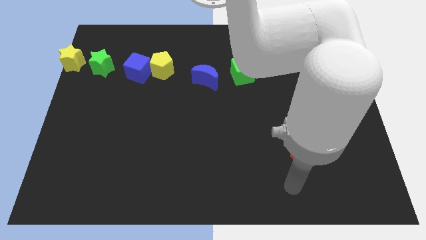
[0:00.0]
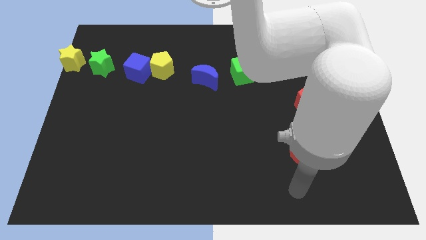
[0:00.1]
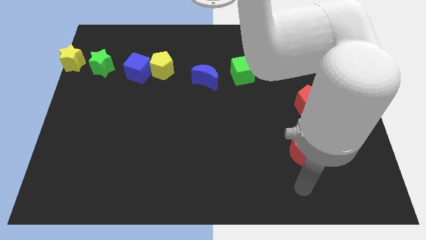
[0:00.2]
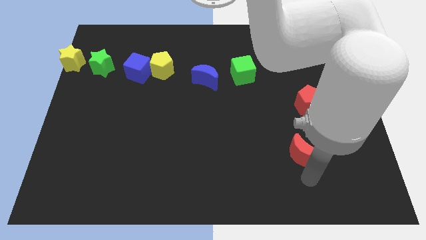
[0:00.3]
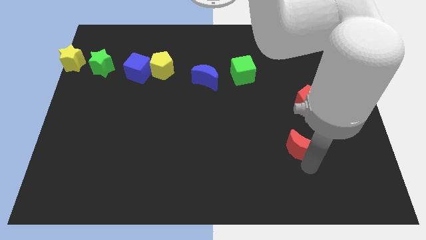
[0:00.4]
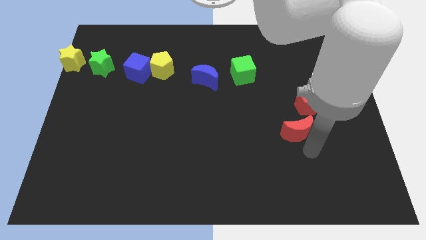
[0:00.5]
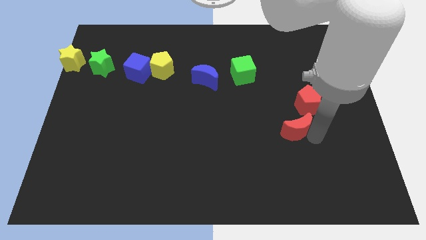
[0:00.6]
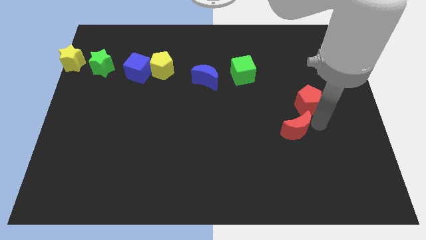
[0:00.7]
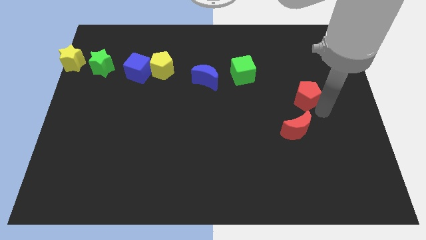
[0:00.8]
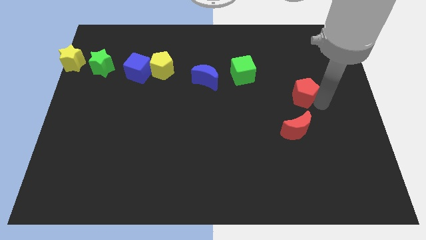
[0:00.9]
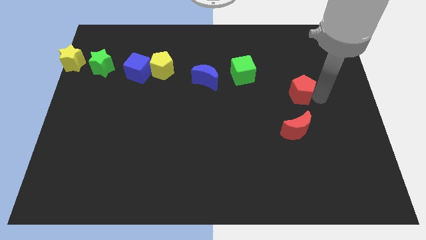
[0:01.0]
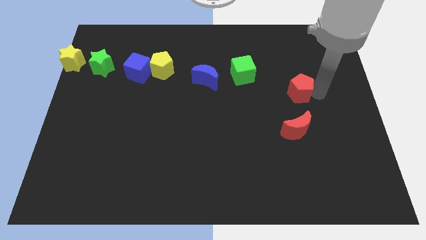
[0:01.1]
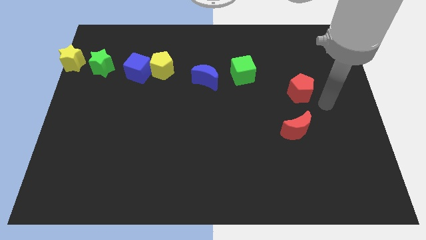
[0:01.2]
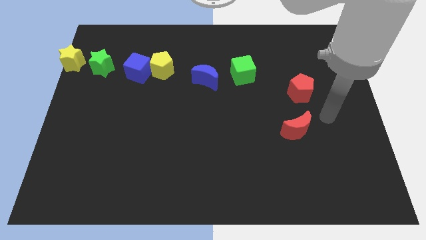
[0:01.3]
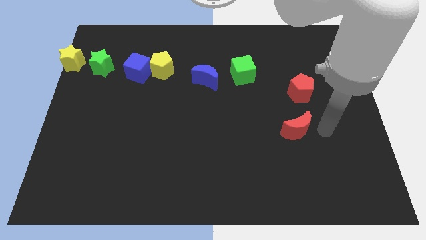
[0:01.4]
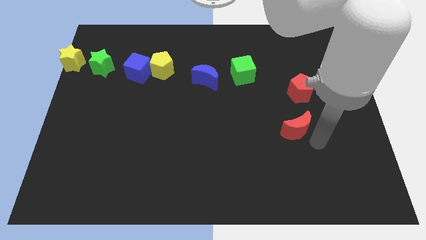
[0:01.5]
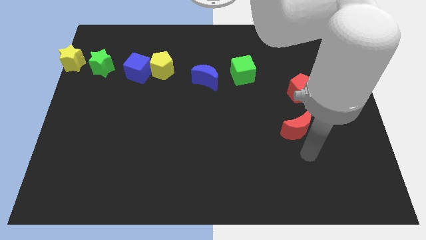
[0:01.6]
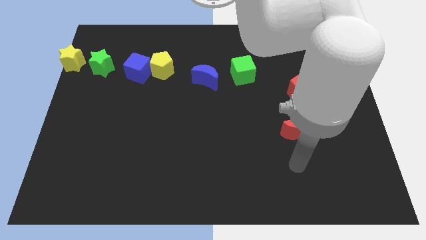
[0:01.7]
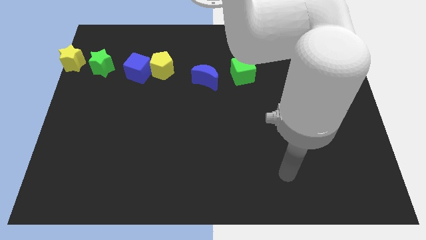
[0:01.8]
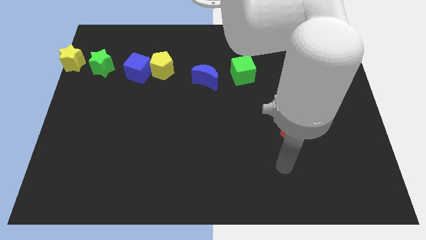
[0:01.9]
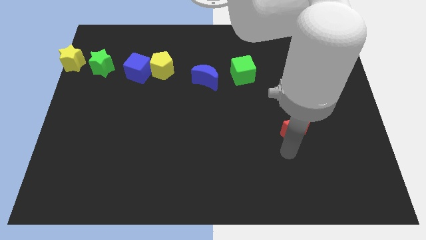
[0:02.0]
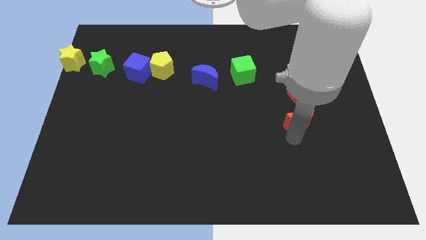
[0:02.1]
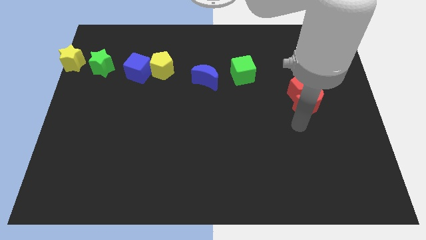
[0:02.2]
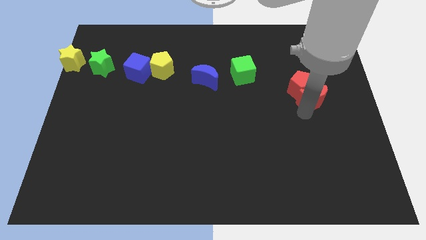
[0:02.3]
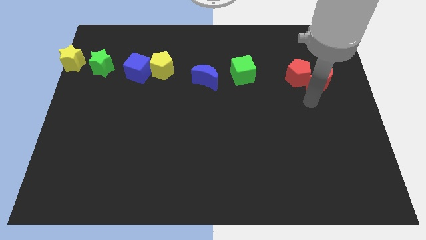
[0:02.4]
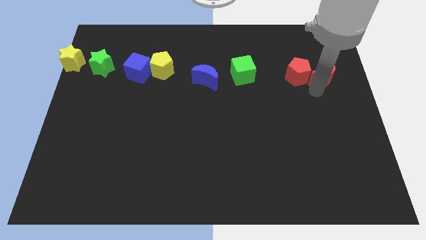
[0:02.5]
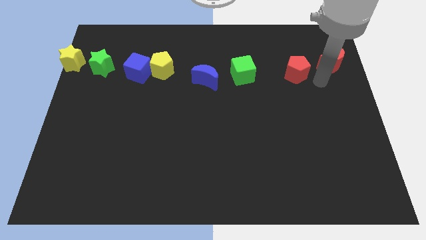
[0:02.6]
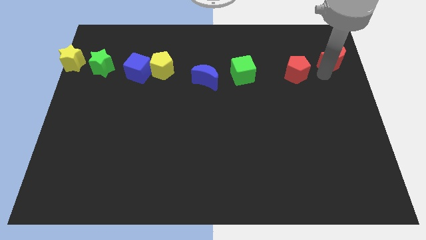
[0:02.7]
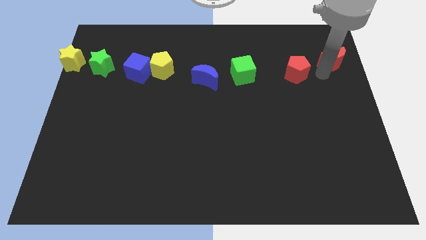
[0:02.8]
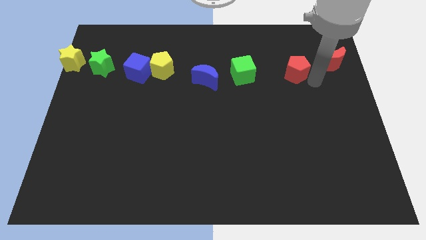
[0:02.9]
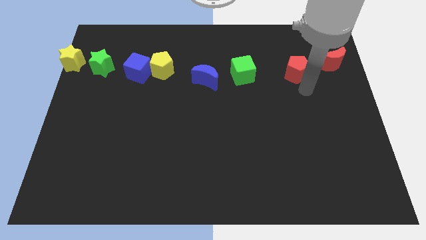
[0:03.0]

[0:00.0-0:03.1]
slide red moon and red pentagon towards top right

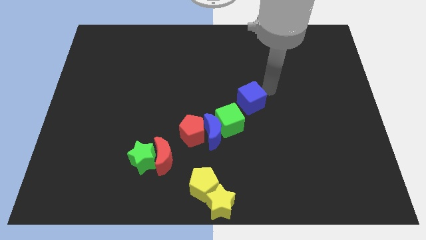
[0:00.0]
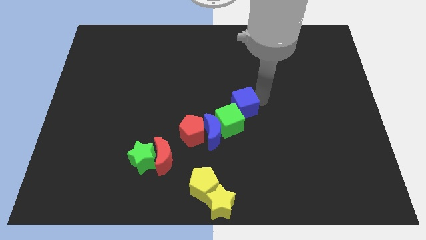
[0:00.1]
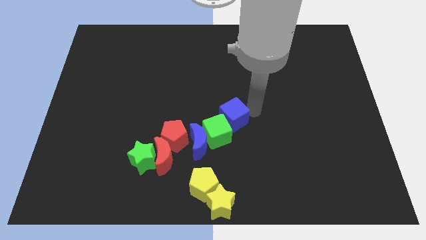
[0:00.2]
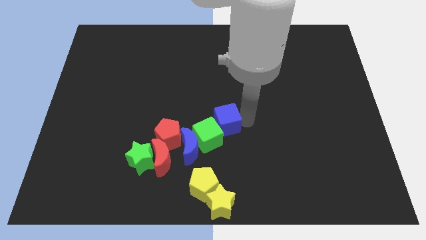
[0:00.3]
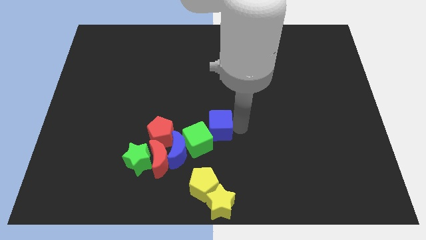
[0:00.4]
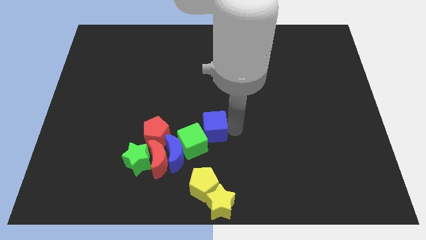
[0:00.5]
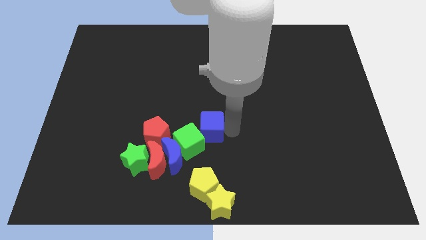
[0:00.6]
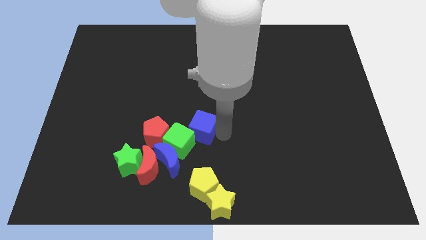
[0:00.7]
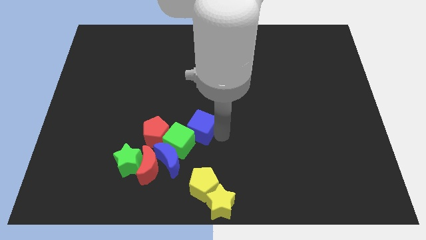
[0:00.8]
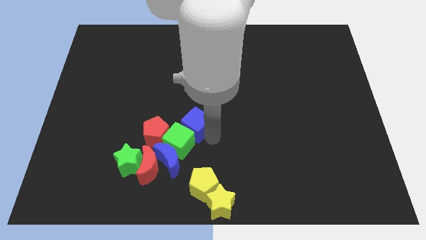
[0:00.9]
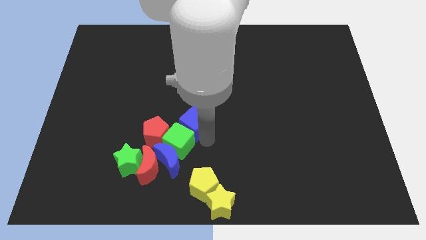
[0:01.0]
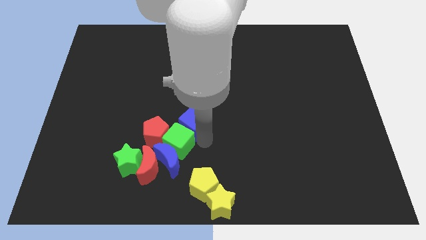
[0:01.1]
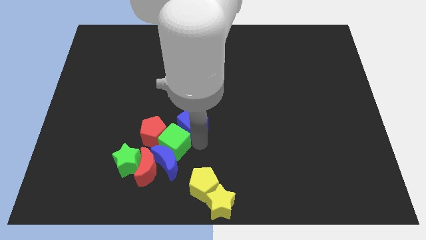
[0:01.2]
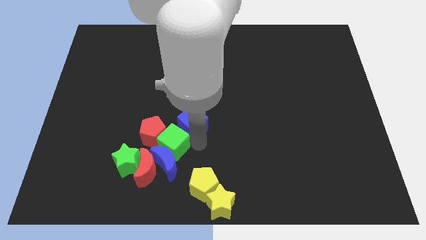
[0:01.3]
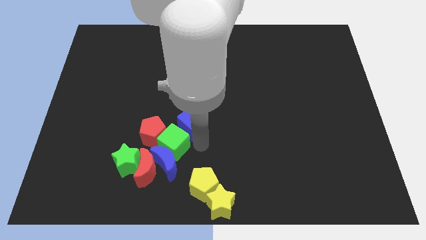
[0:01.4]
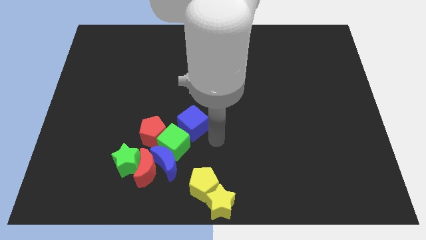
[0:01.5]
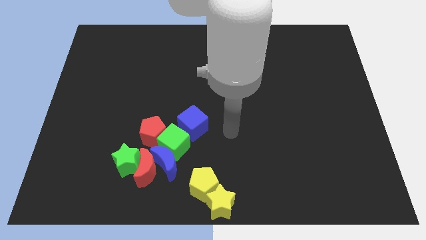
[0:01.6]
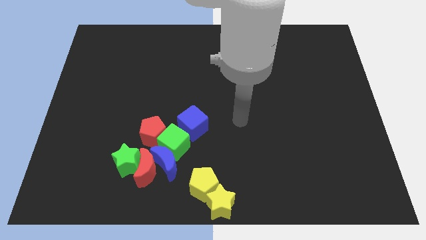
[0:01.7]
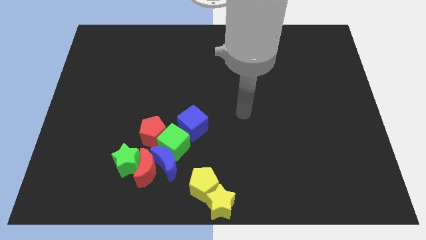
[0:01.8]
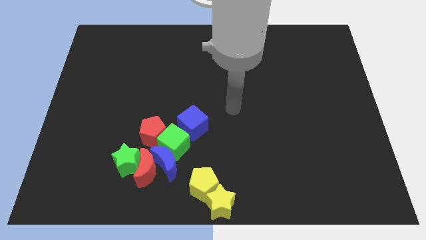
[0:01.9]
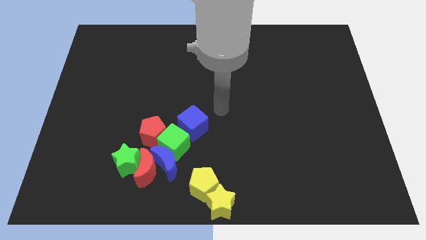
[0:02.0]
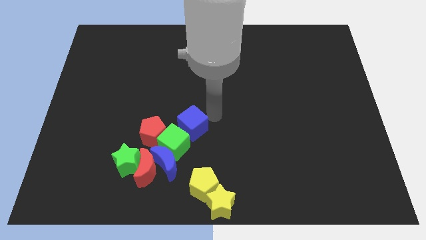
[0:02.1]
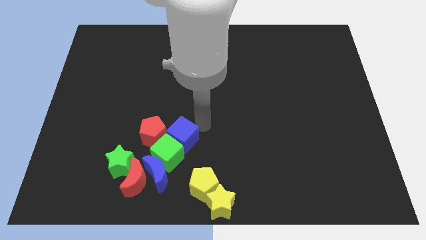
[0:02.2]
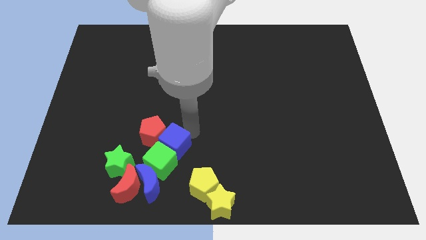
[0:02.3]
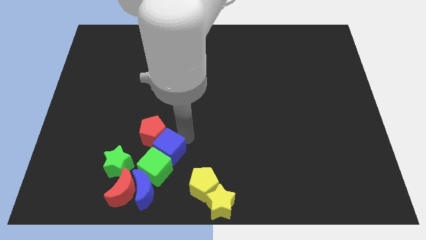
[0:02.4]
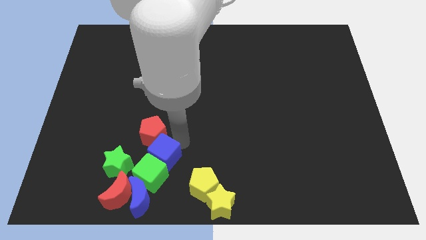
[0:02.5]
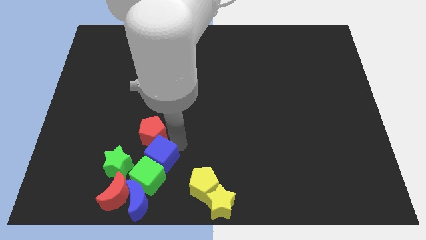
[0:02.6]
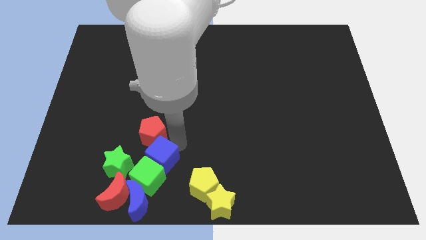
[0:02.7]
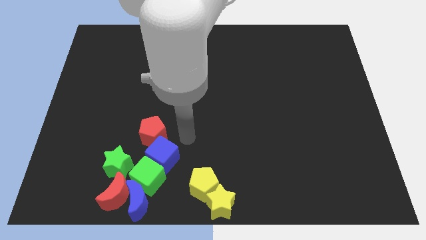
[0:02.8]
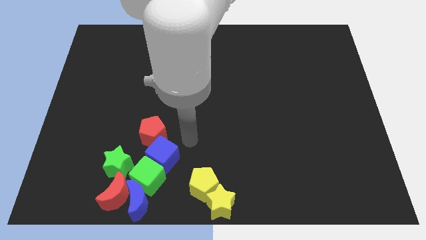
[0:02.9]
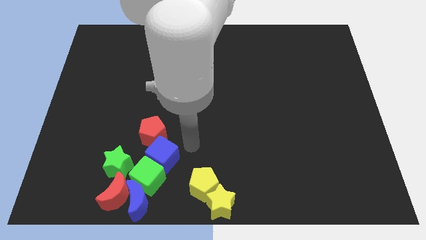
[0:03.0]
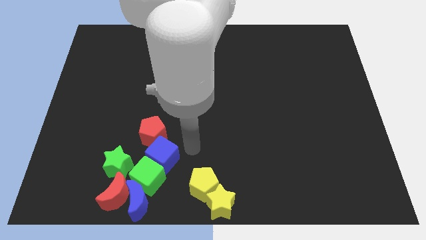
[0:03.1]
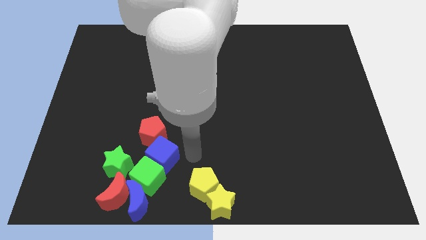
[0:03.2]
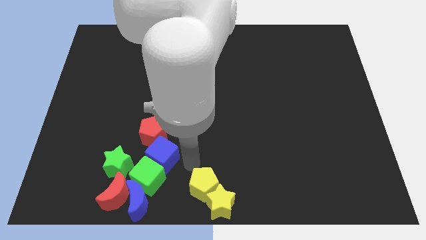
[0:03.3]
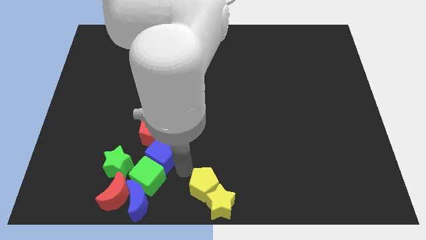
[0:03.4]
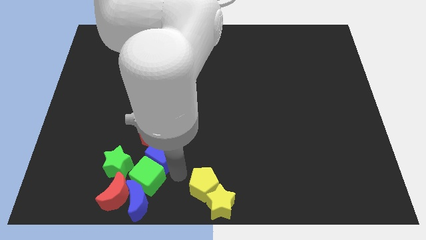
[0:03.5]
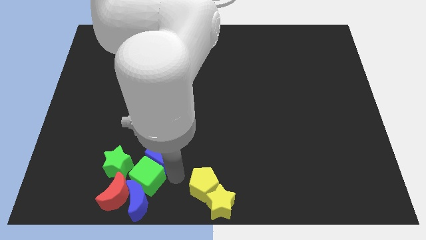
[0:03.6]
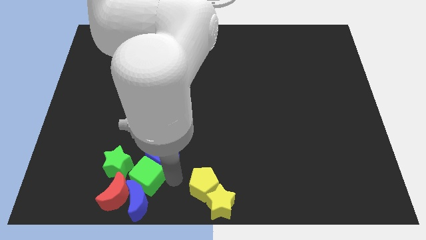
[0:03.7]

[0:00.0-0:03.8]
move the blue cube into the green cube and blue cresent

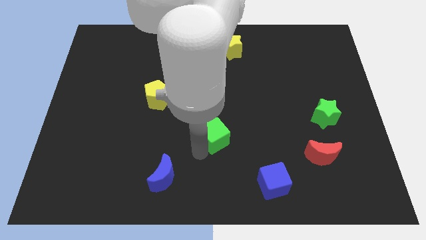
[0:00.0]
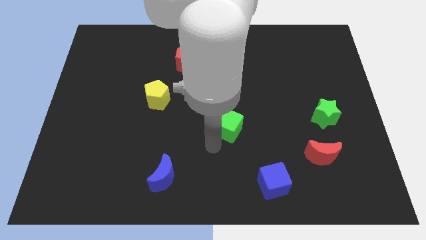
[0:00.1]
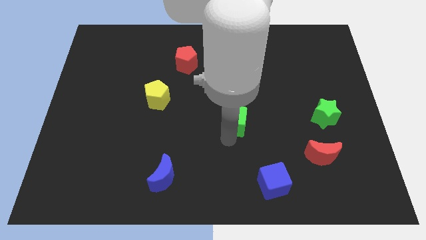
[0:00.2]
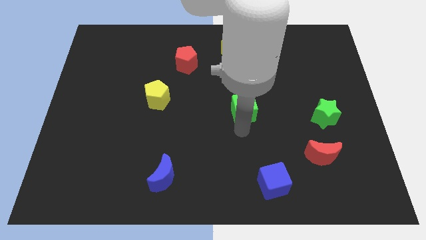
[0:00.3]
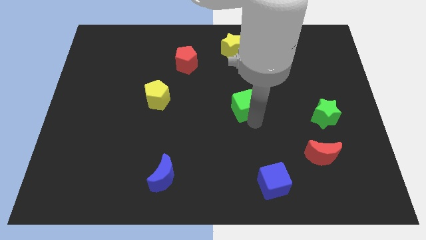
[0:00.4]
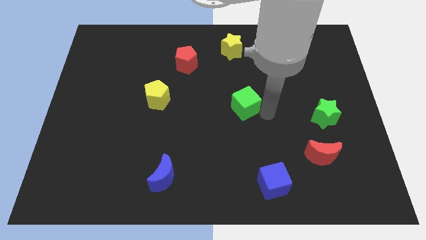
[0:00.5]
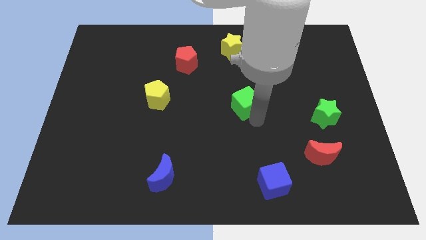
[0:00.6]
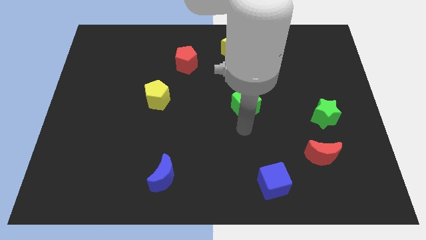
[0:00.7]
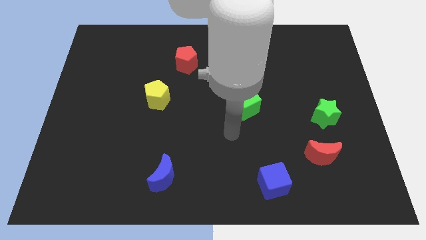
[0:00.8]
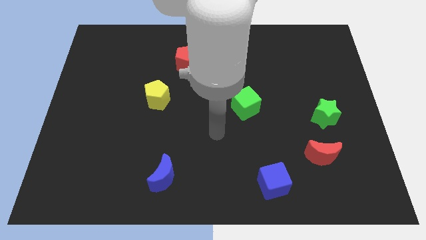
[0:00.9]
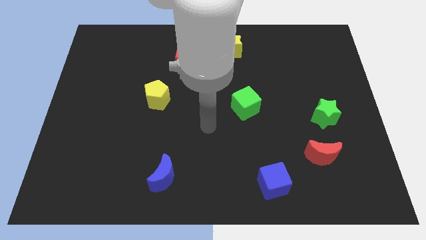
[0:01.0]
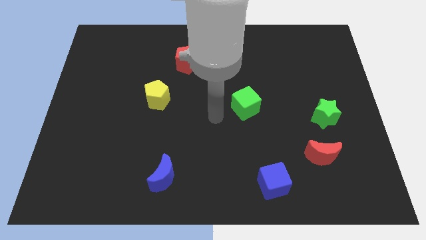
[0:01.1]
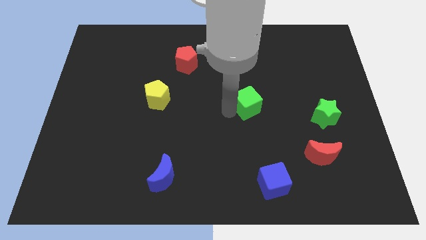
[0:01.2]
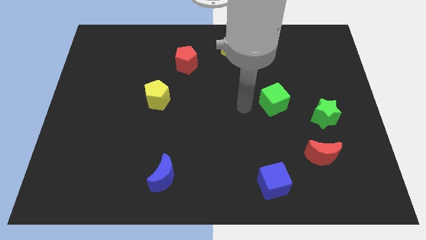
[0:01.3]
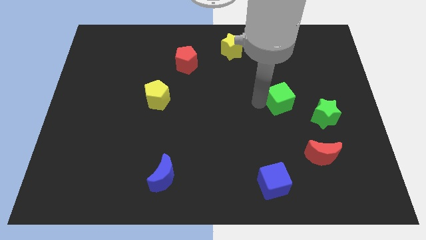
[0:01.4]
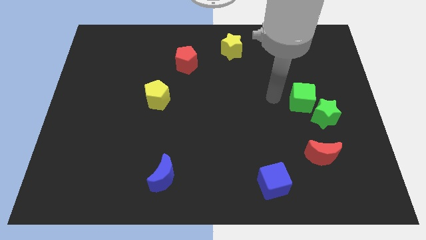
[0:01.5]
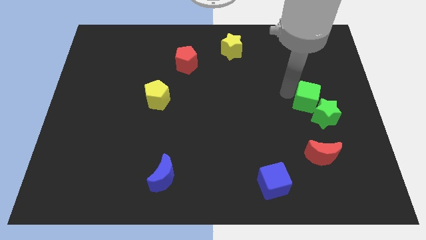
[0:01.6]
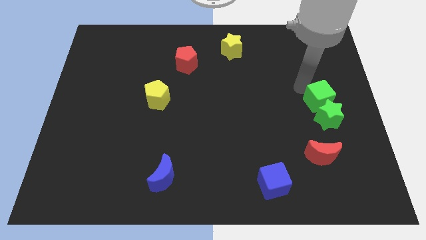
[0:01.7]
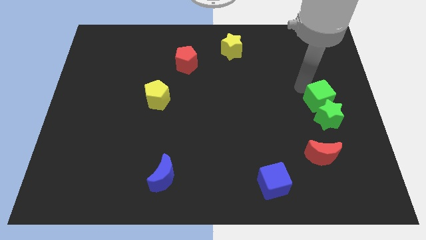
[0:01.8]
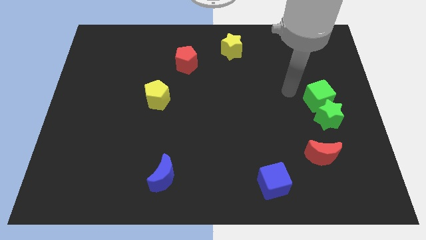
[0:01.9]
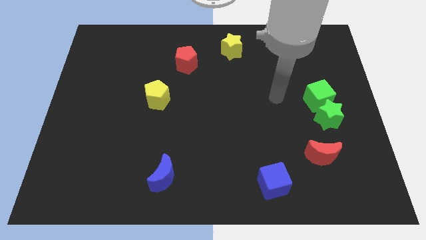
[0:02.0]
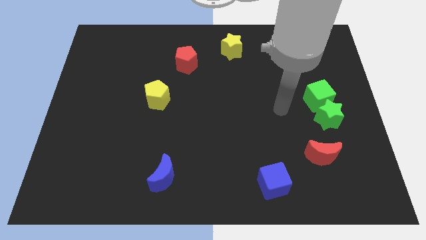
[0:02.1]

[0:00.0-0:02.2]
move the green cube into the green star
